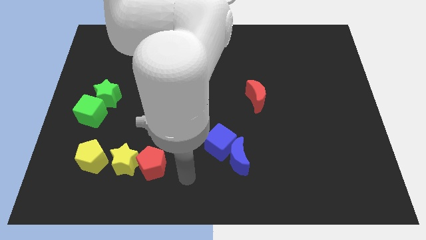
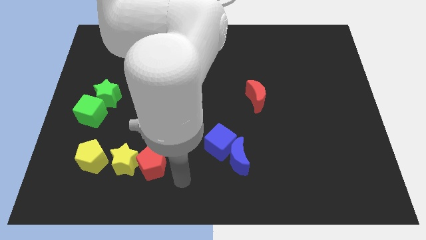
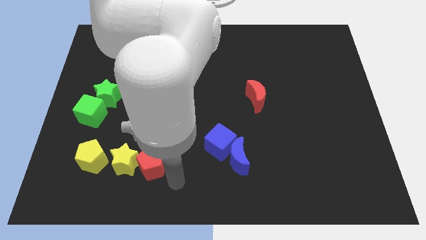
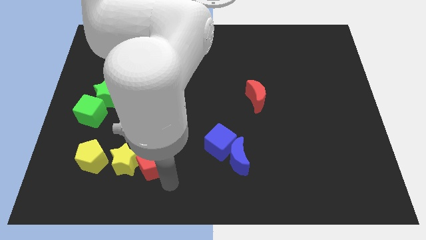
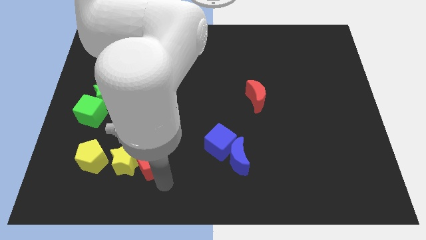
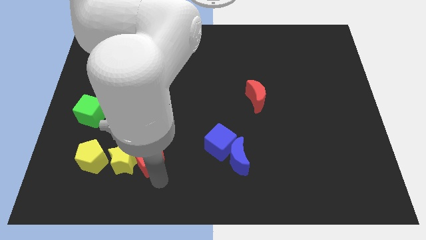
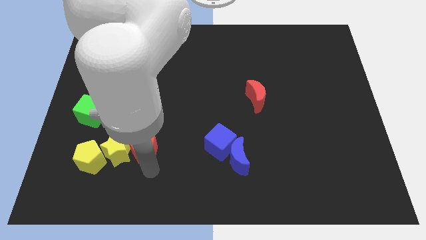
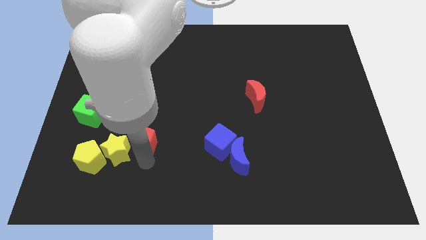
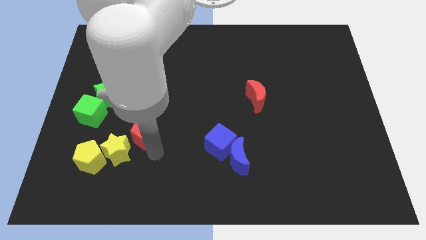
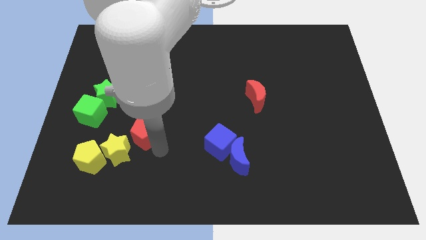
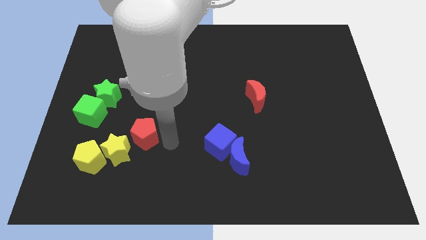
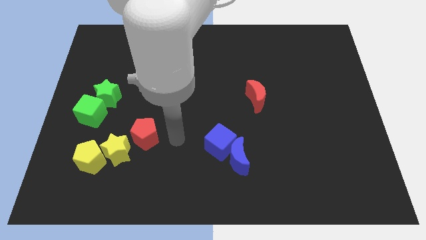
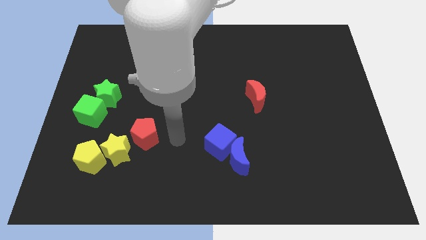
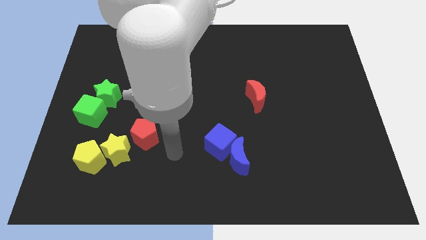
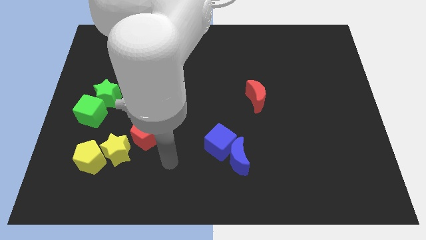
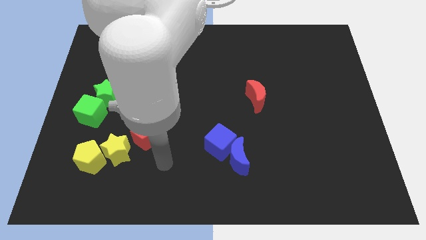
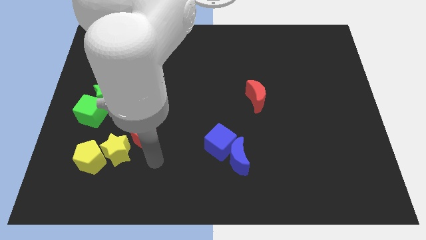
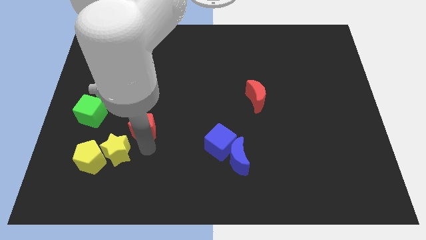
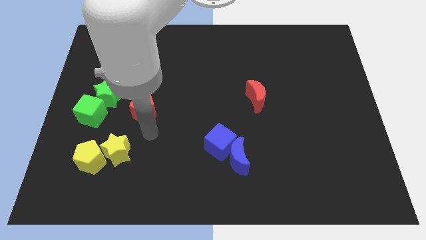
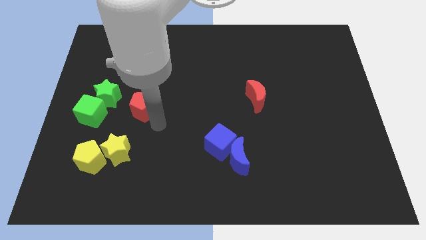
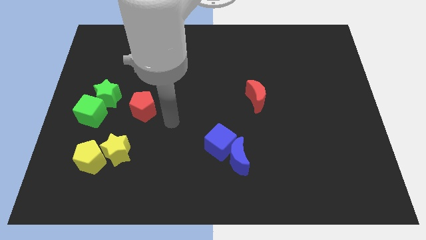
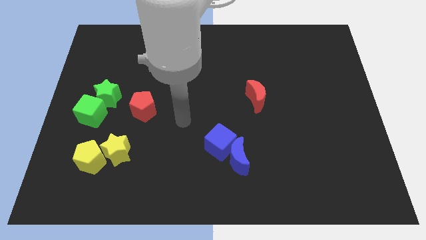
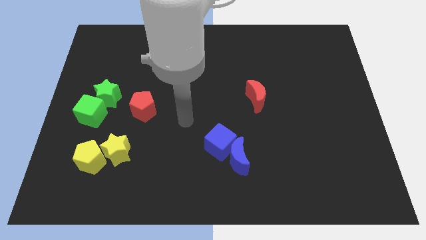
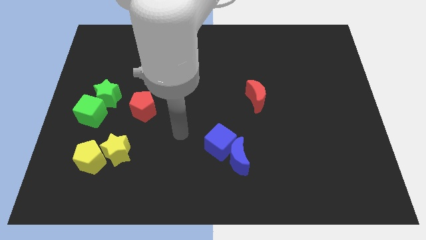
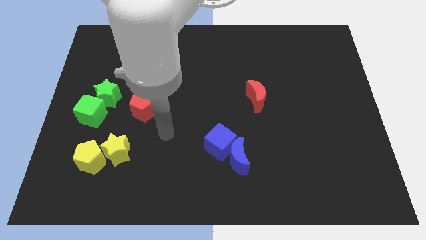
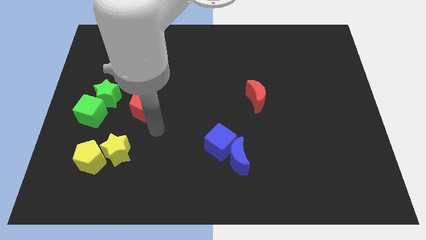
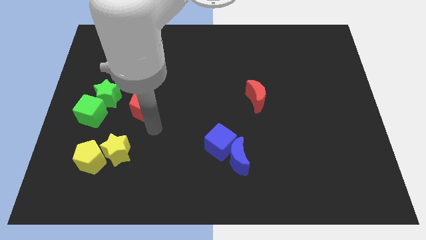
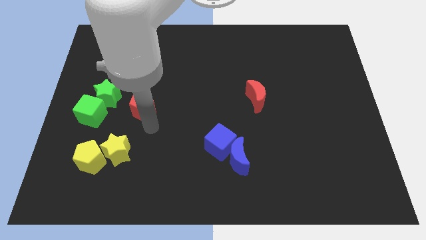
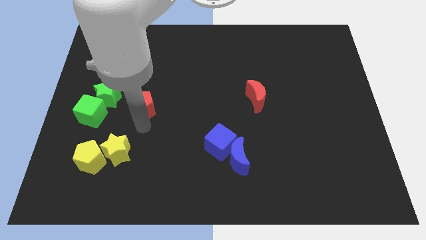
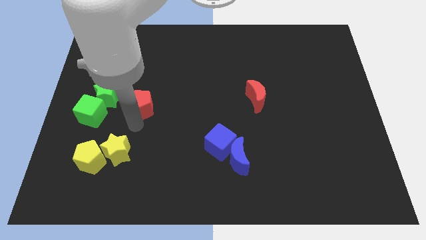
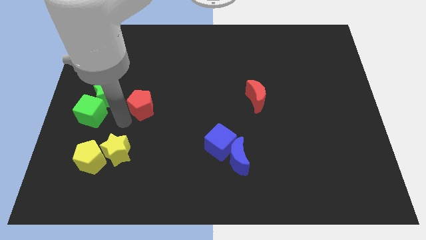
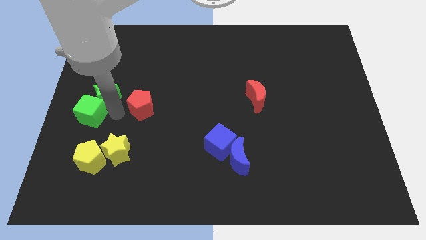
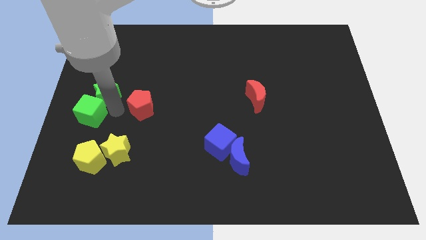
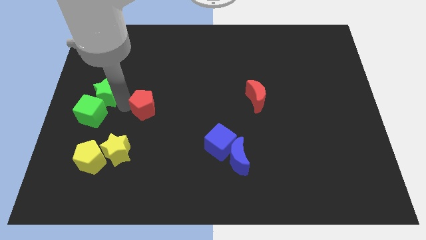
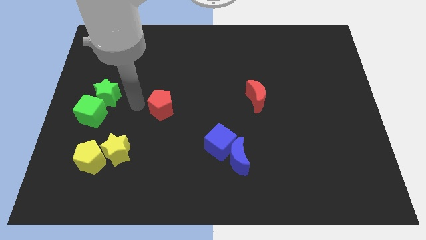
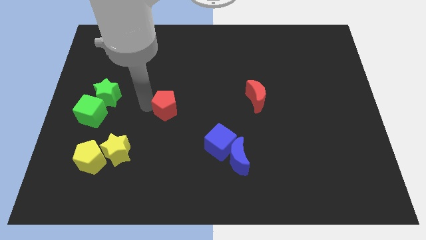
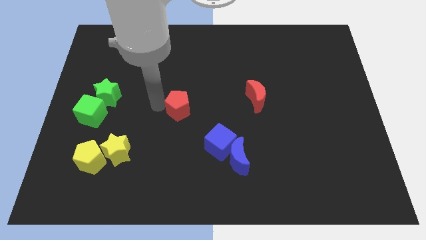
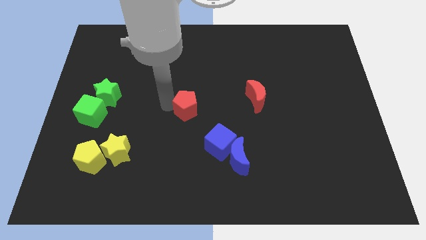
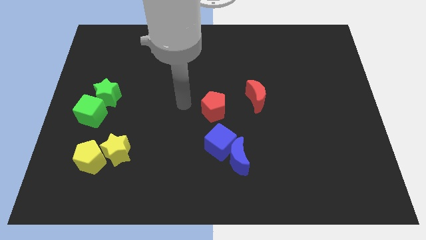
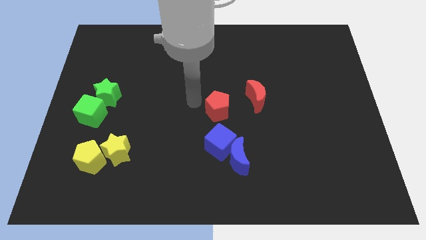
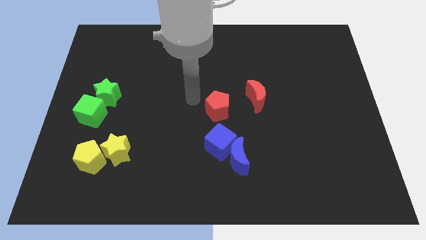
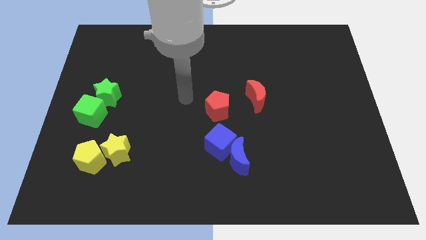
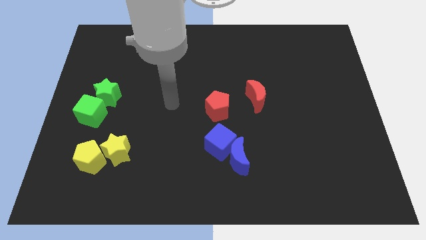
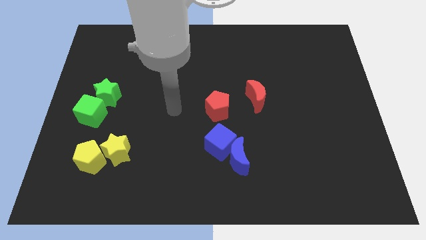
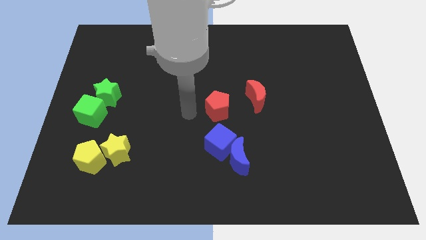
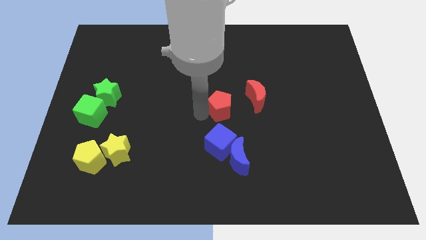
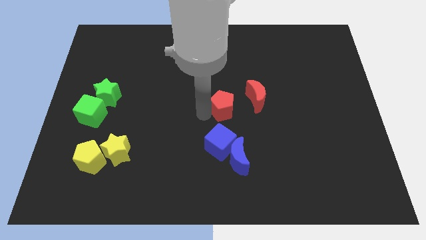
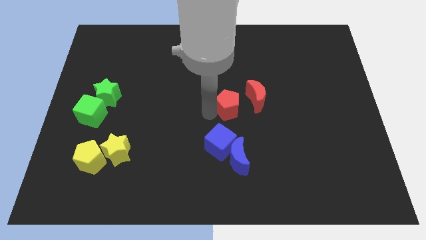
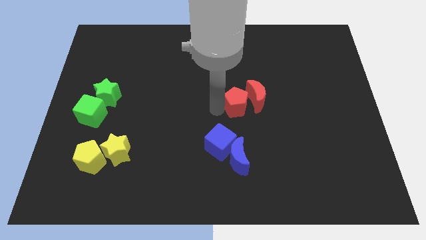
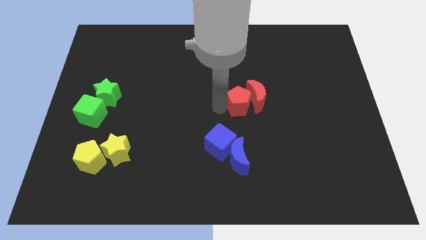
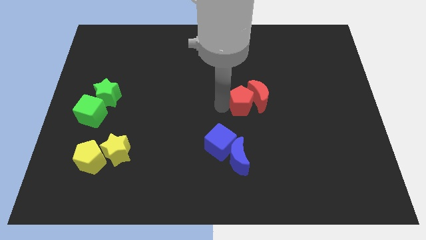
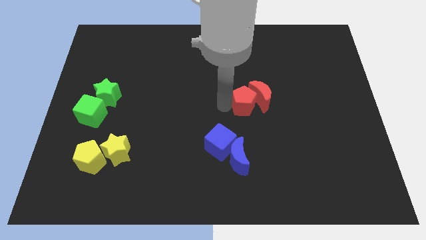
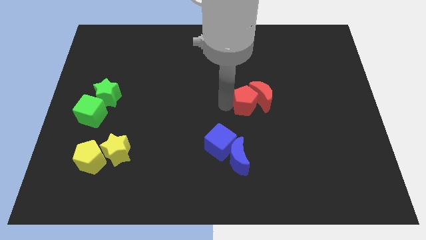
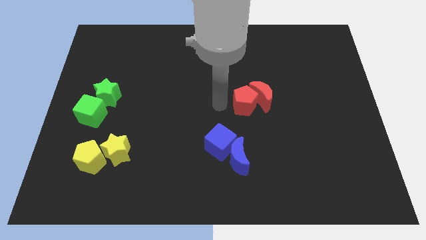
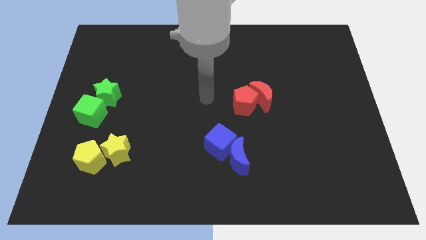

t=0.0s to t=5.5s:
make a group of red blocks at the top side of the blue blocks

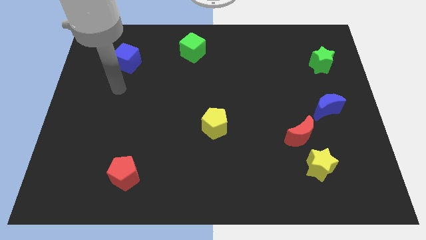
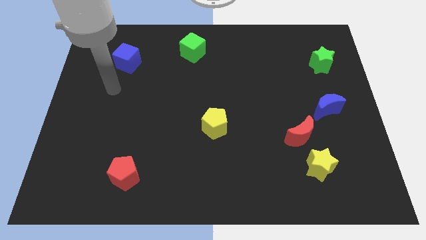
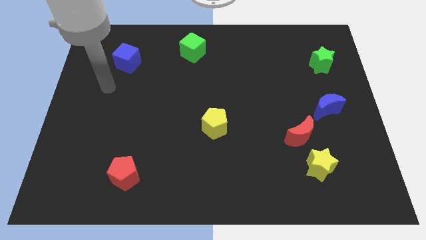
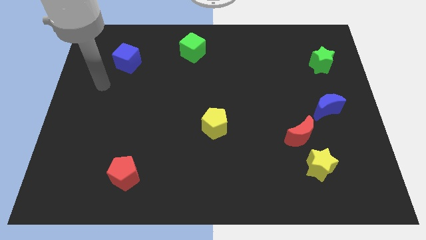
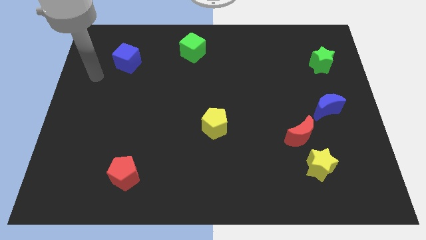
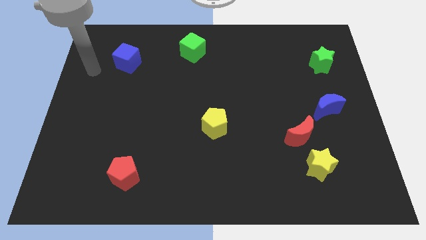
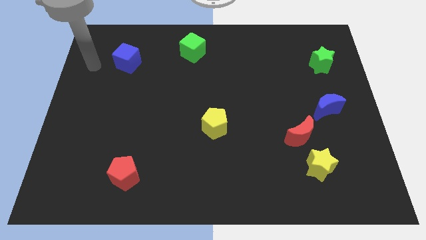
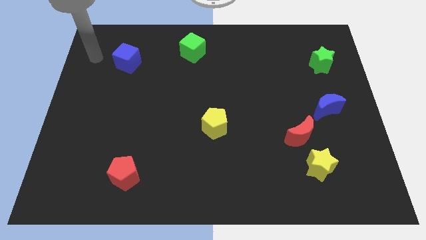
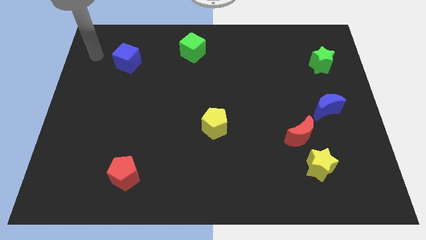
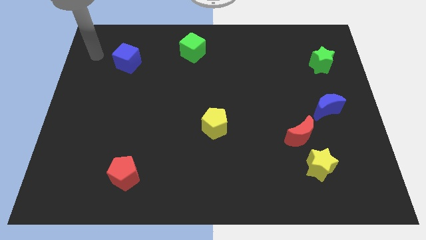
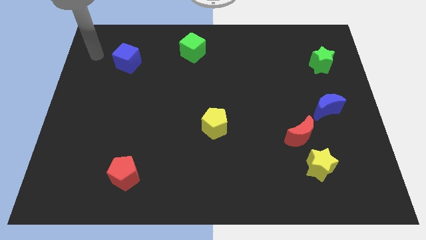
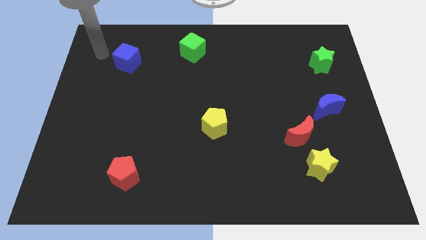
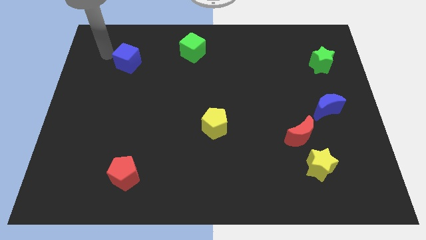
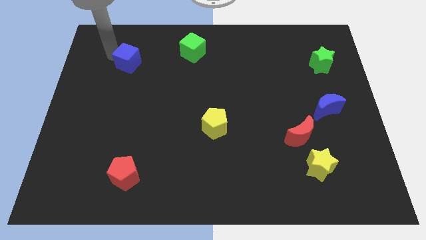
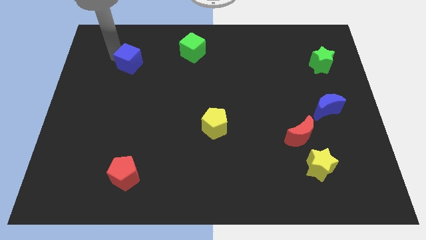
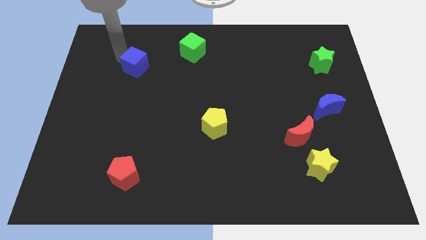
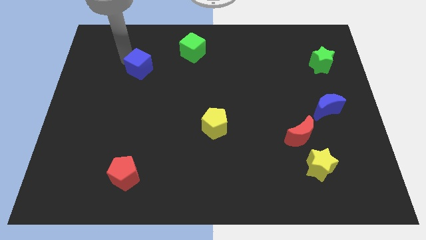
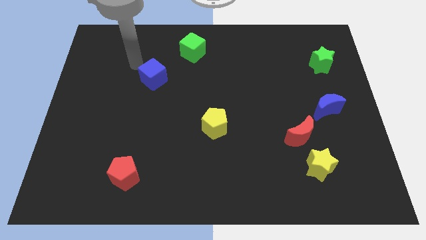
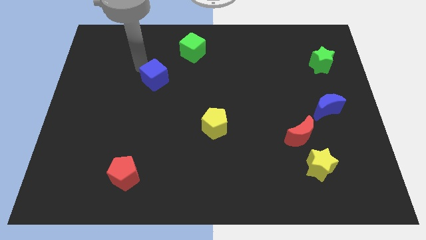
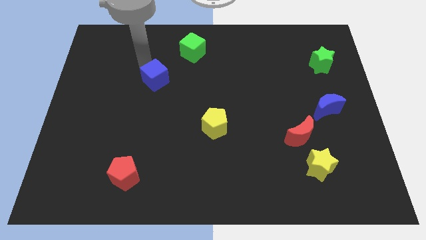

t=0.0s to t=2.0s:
place the blue cube diagonally bottom left to the green cube

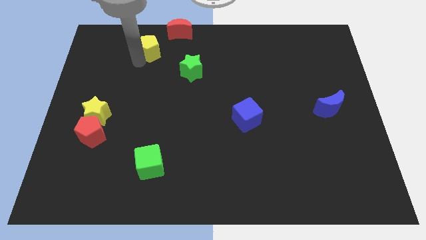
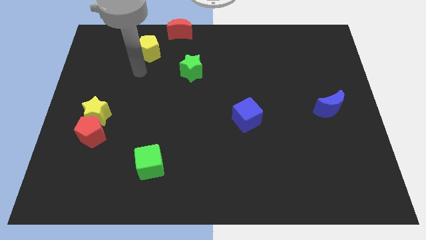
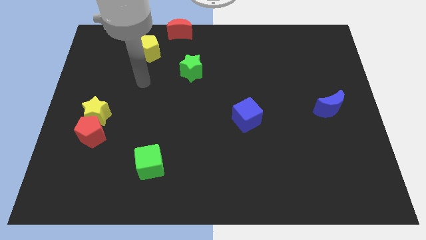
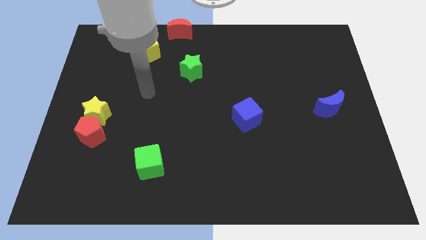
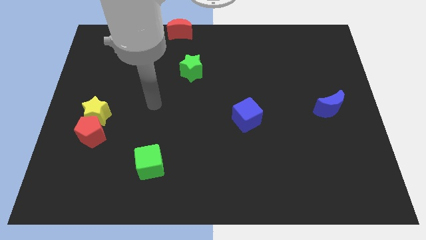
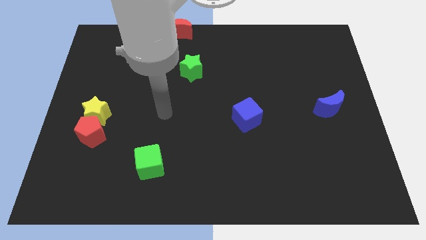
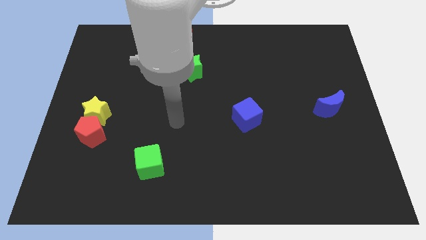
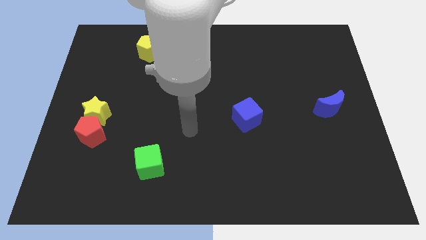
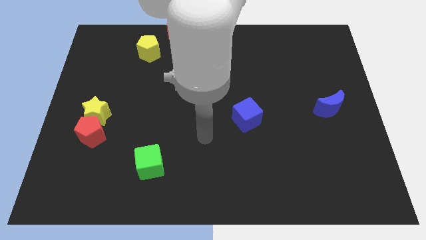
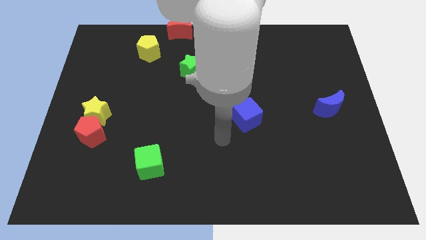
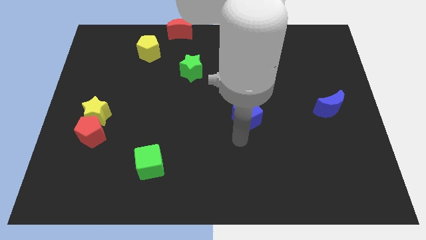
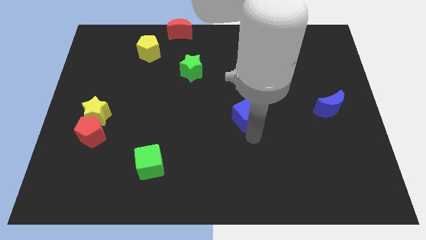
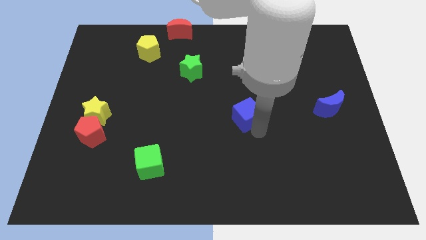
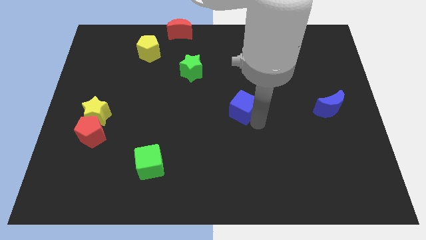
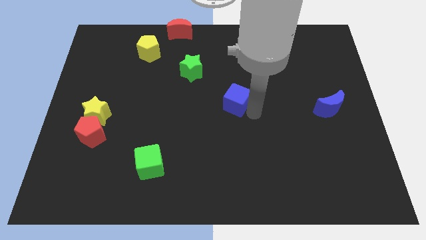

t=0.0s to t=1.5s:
move your arm away from the yellow pentagon
